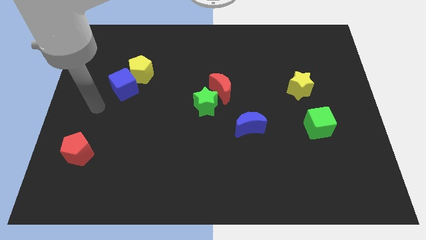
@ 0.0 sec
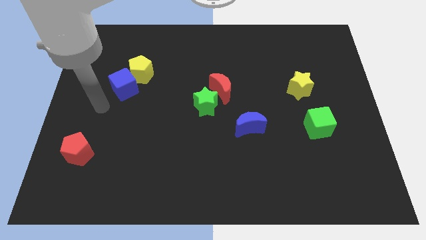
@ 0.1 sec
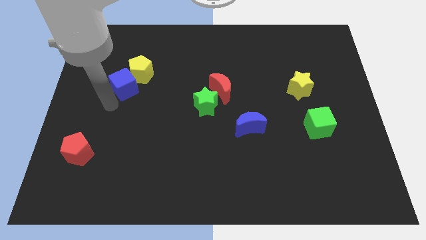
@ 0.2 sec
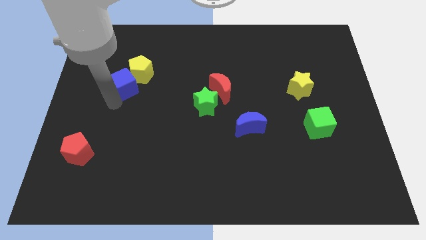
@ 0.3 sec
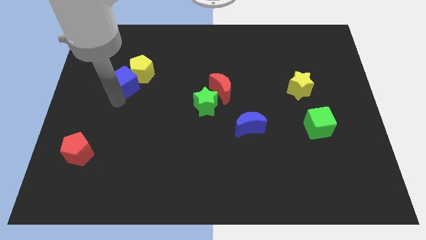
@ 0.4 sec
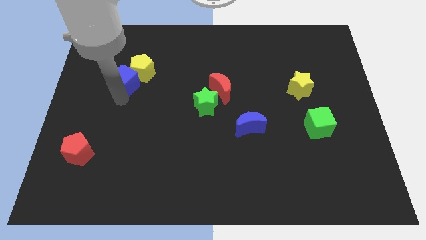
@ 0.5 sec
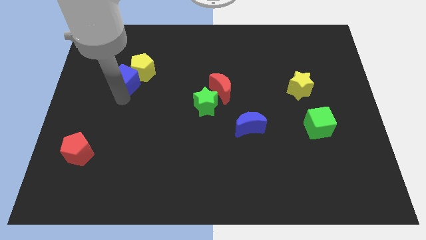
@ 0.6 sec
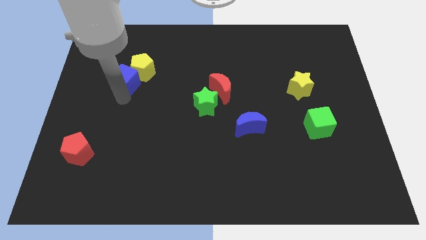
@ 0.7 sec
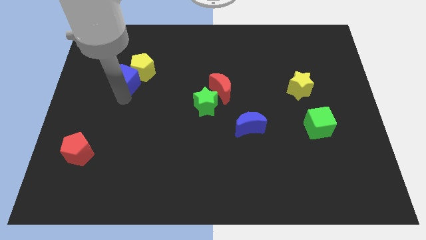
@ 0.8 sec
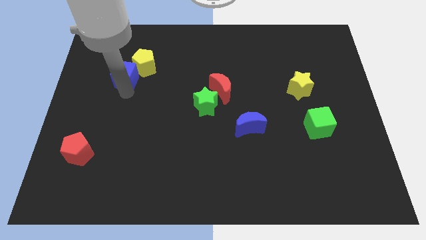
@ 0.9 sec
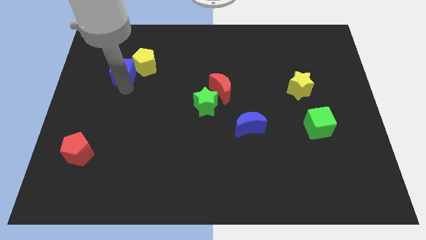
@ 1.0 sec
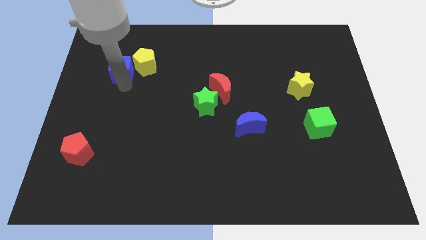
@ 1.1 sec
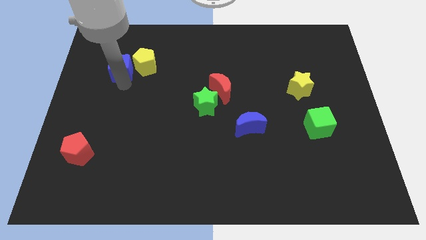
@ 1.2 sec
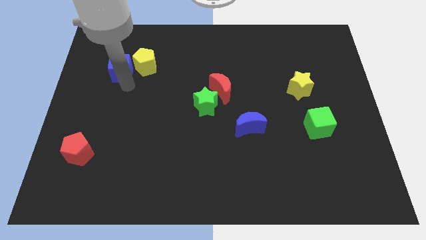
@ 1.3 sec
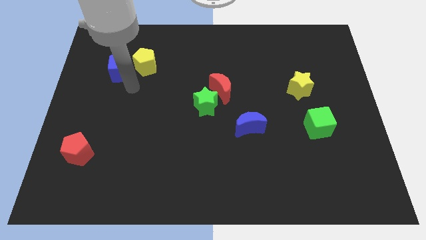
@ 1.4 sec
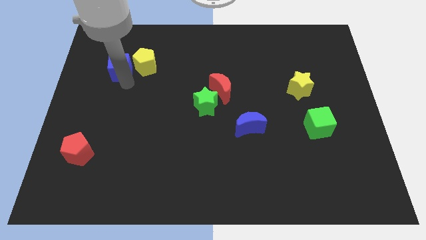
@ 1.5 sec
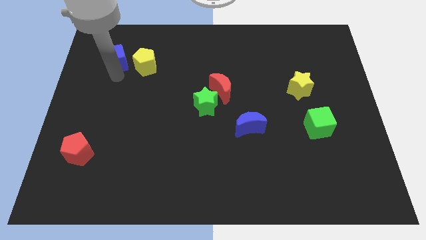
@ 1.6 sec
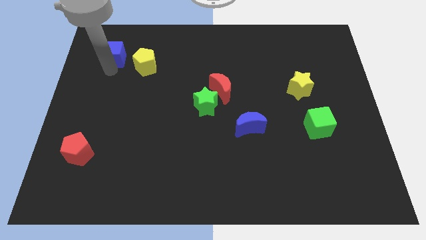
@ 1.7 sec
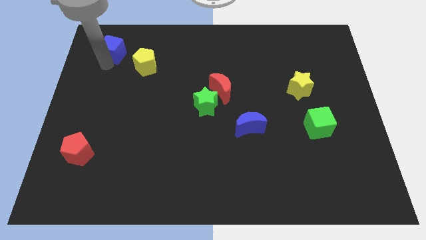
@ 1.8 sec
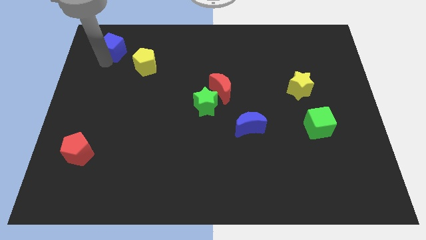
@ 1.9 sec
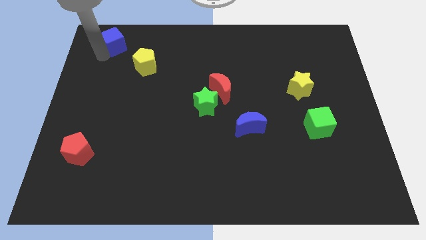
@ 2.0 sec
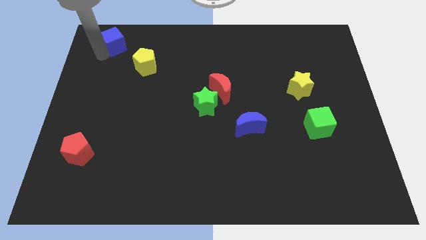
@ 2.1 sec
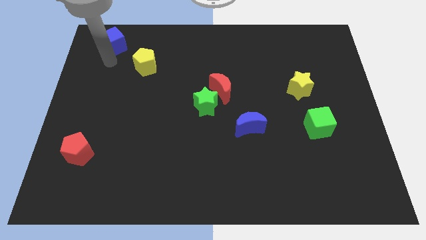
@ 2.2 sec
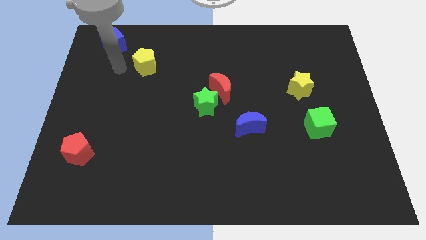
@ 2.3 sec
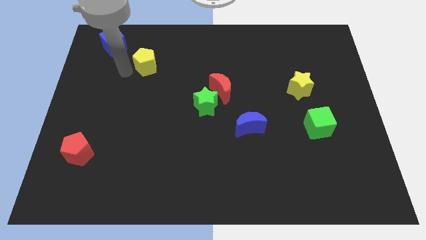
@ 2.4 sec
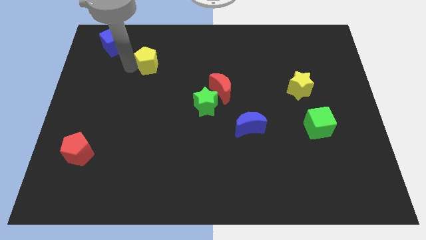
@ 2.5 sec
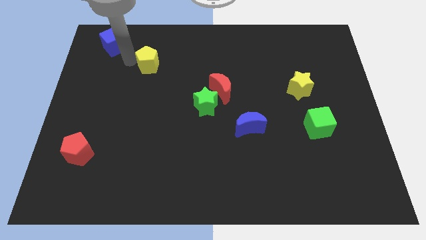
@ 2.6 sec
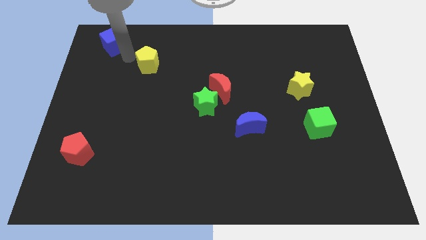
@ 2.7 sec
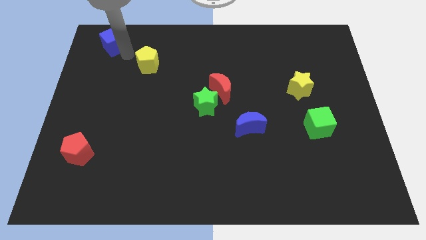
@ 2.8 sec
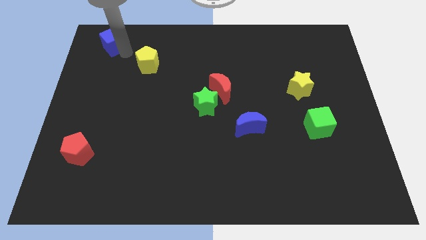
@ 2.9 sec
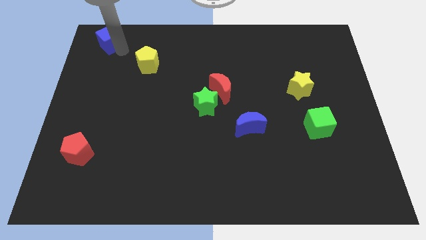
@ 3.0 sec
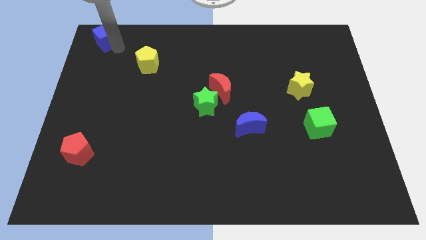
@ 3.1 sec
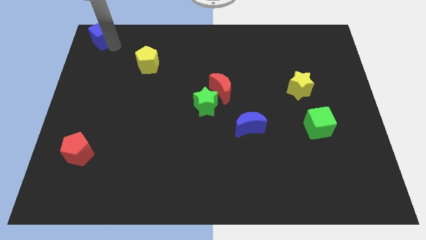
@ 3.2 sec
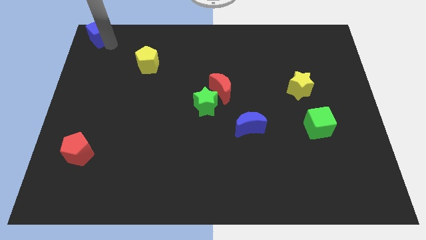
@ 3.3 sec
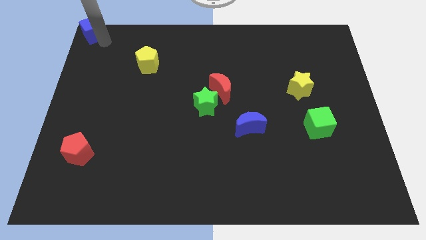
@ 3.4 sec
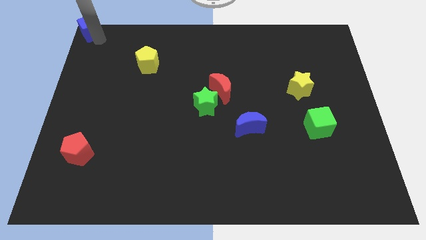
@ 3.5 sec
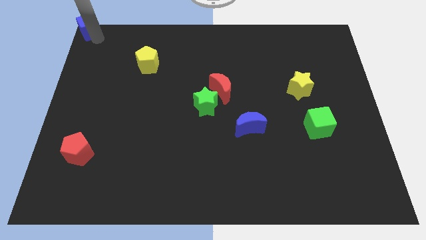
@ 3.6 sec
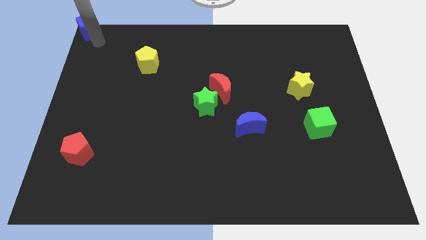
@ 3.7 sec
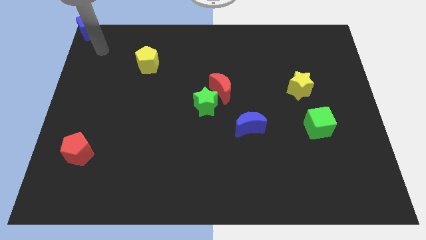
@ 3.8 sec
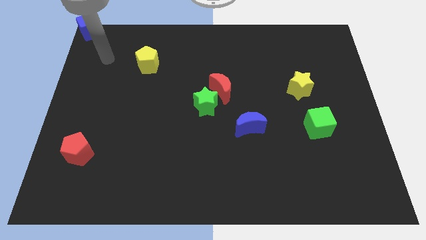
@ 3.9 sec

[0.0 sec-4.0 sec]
push the blue cube to the top left corner of the board

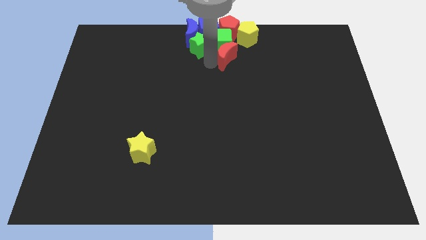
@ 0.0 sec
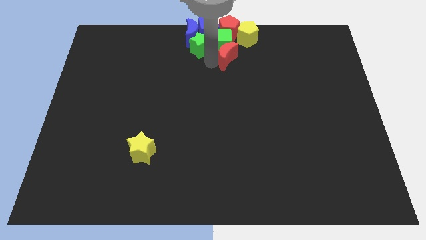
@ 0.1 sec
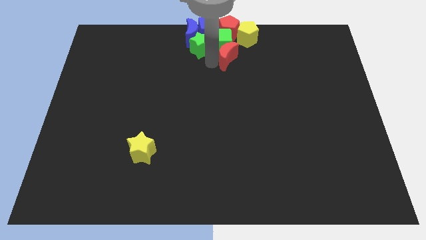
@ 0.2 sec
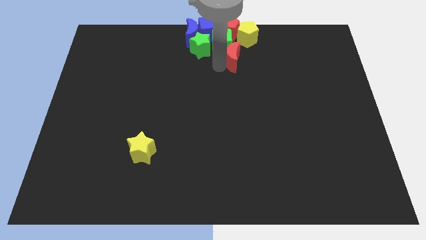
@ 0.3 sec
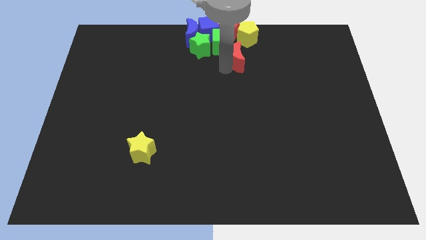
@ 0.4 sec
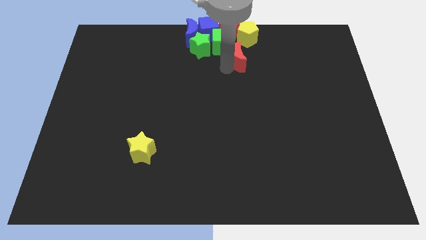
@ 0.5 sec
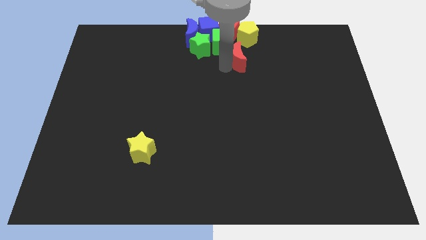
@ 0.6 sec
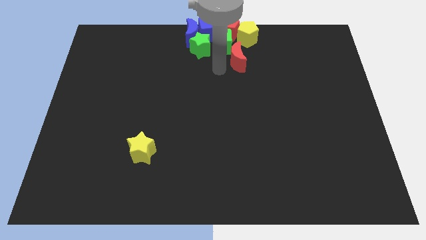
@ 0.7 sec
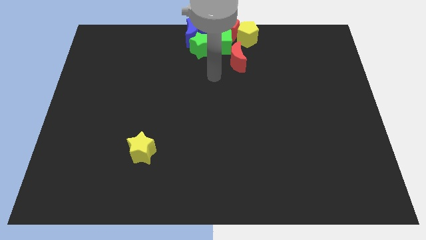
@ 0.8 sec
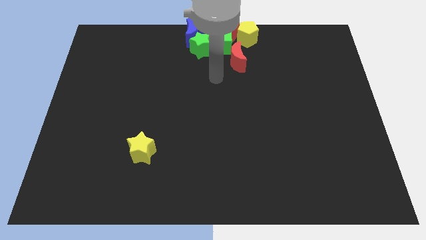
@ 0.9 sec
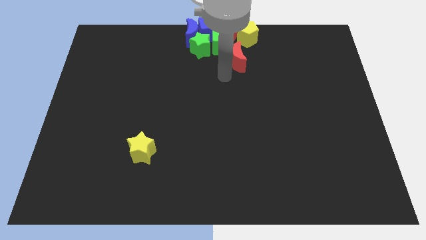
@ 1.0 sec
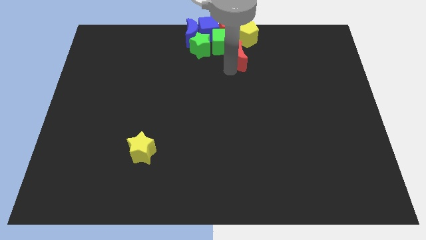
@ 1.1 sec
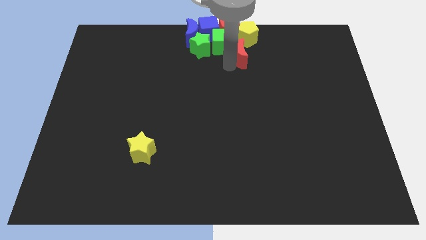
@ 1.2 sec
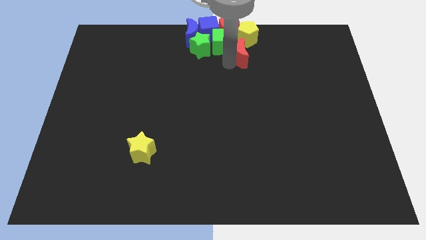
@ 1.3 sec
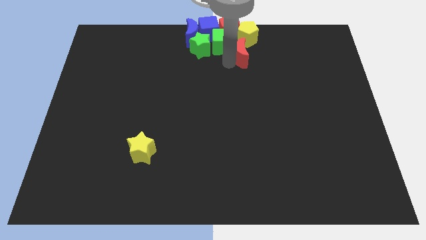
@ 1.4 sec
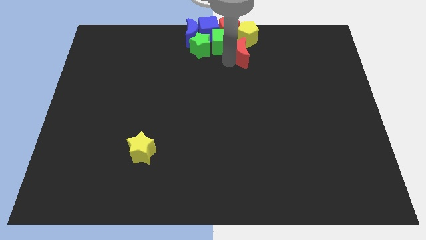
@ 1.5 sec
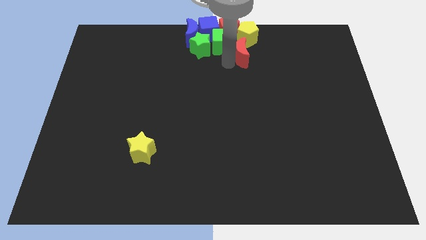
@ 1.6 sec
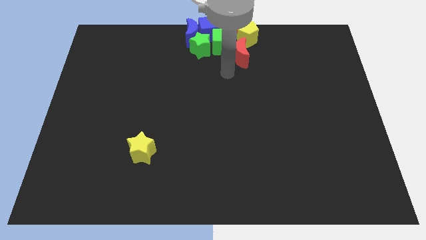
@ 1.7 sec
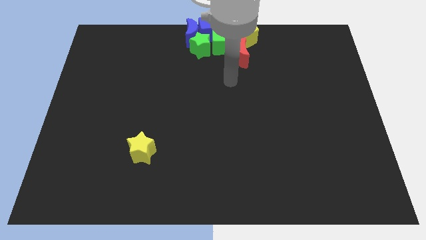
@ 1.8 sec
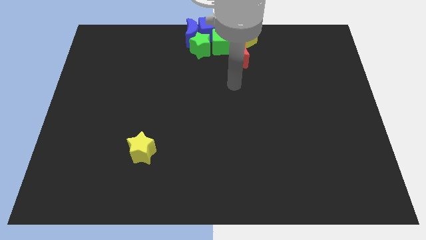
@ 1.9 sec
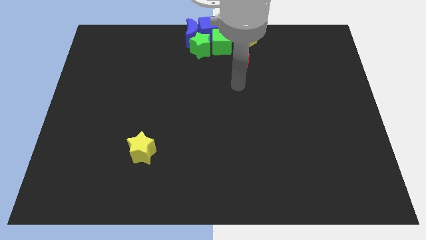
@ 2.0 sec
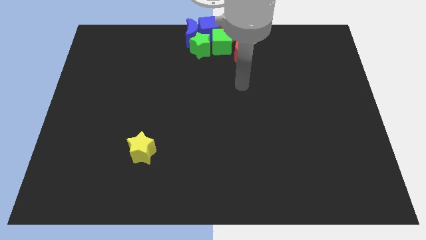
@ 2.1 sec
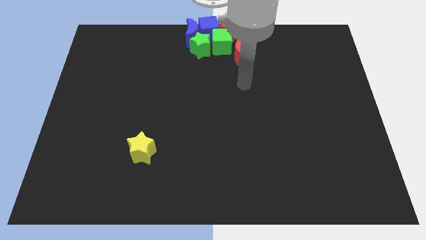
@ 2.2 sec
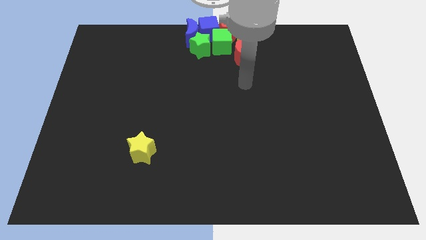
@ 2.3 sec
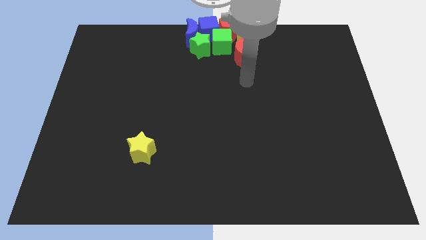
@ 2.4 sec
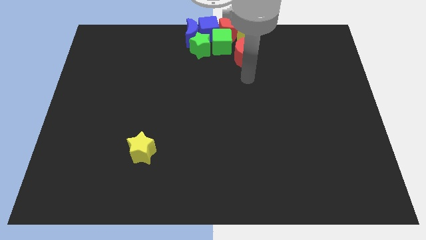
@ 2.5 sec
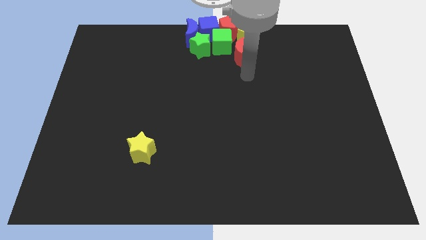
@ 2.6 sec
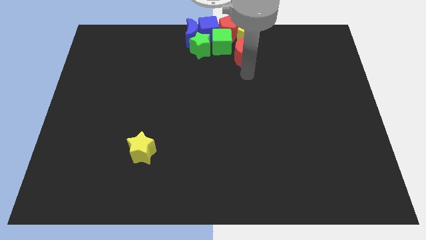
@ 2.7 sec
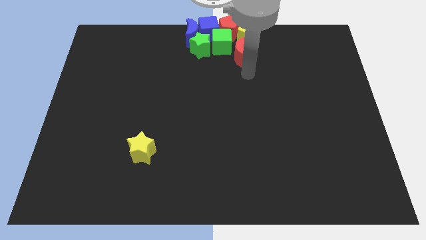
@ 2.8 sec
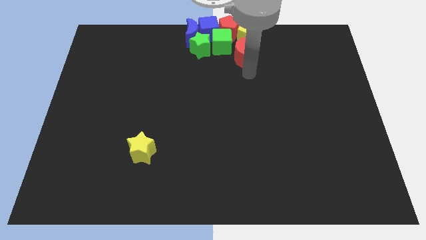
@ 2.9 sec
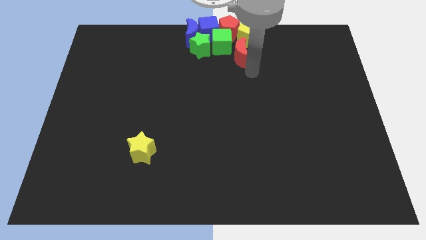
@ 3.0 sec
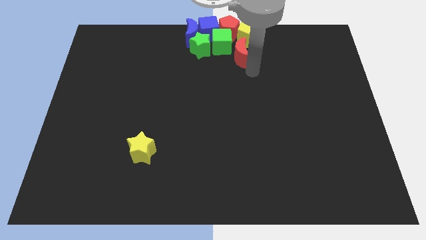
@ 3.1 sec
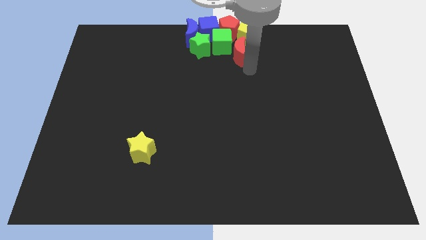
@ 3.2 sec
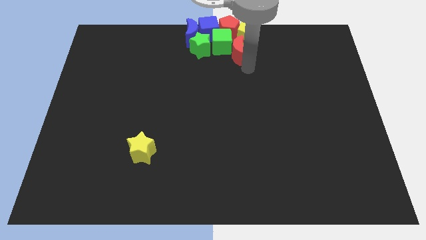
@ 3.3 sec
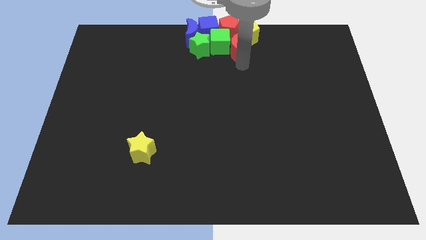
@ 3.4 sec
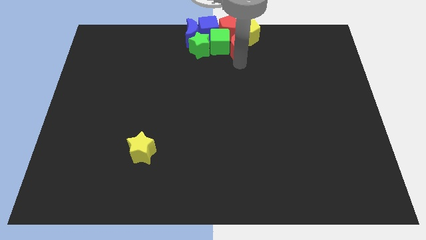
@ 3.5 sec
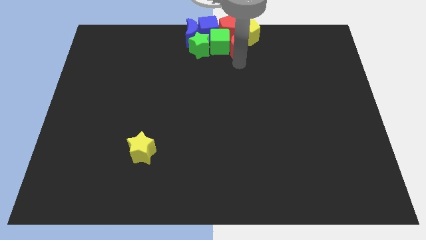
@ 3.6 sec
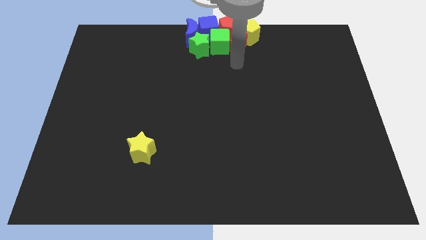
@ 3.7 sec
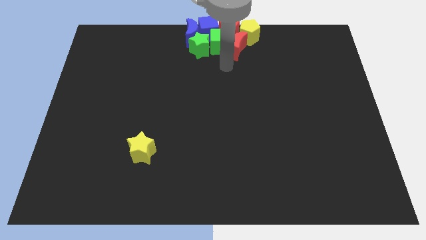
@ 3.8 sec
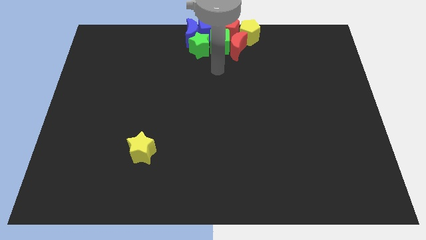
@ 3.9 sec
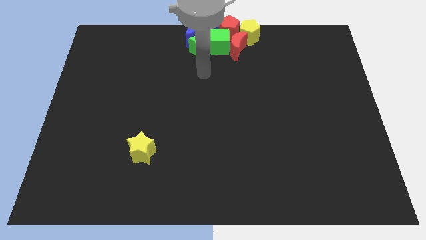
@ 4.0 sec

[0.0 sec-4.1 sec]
push the red moon into the bottom left of the yellow pentagon

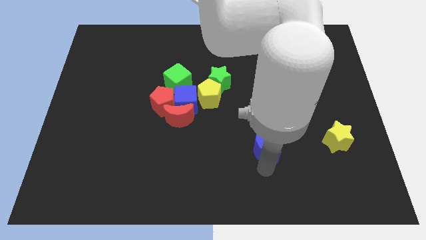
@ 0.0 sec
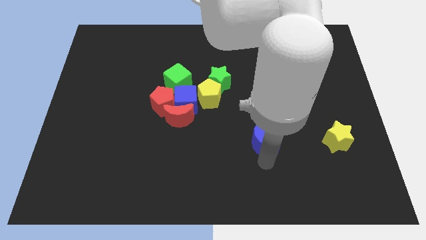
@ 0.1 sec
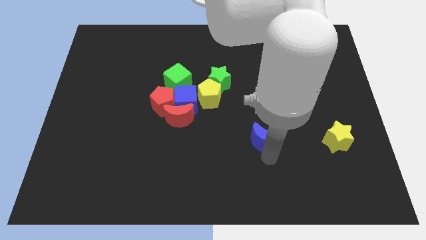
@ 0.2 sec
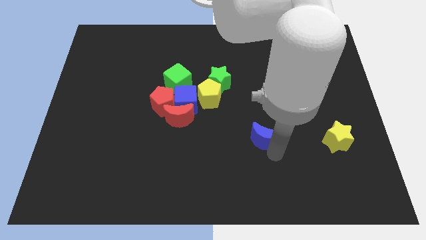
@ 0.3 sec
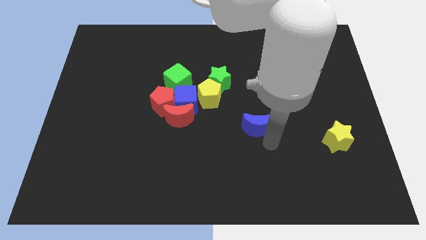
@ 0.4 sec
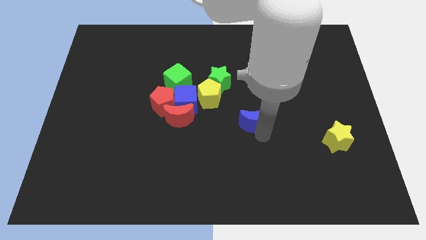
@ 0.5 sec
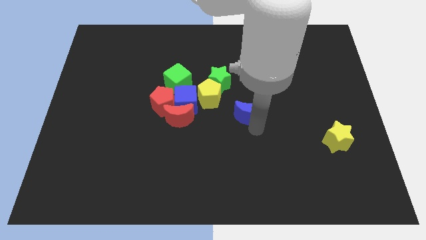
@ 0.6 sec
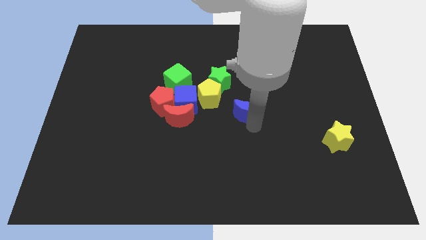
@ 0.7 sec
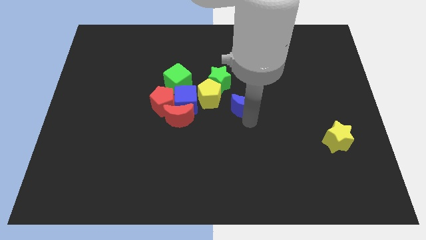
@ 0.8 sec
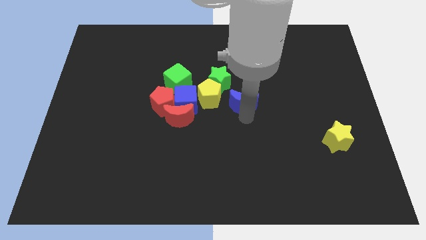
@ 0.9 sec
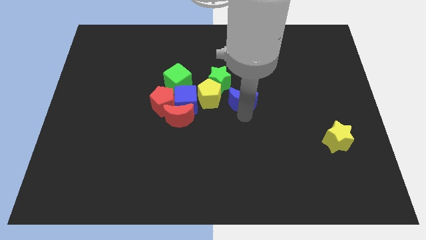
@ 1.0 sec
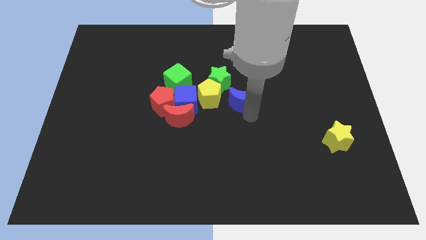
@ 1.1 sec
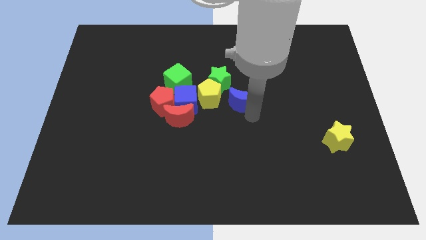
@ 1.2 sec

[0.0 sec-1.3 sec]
place the blue moon towards the right side of the yellow pentagon
